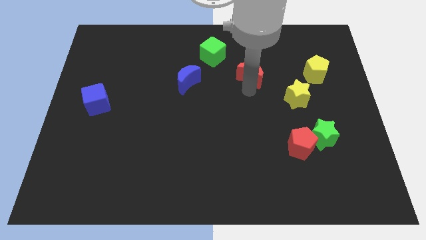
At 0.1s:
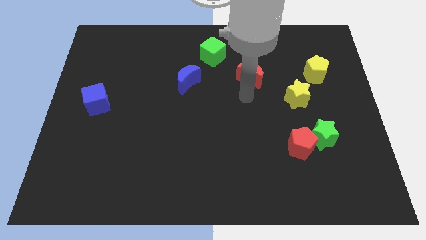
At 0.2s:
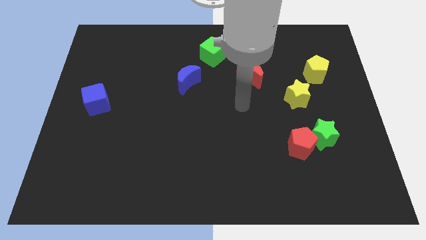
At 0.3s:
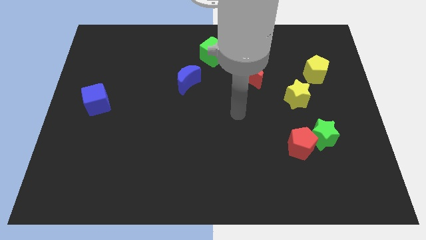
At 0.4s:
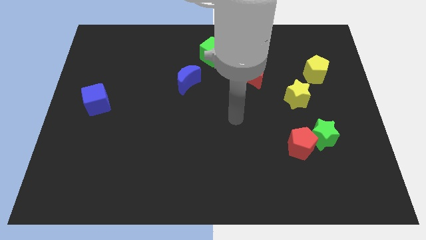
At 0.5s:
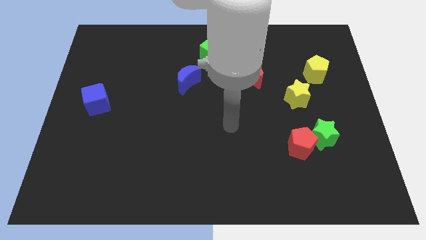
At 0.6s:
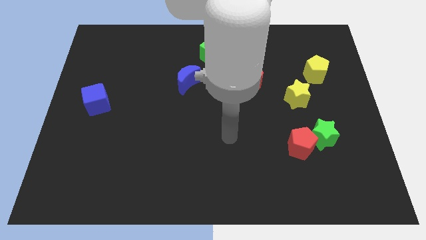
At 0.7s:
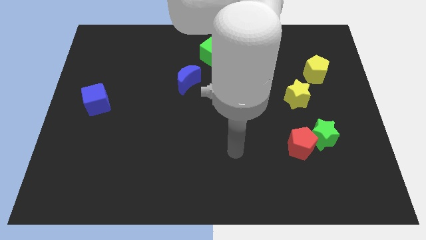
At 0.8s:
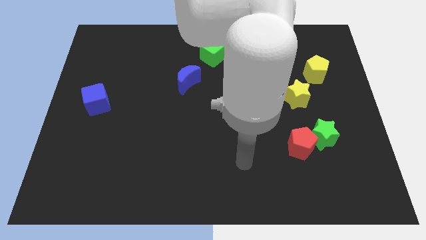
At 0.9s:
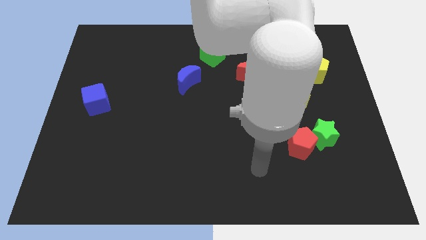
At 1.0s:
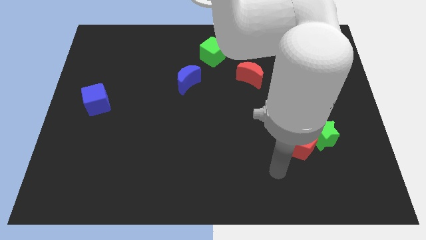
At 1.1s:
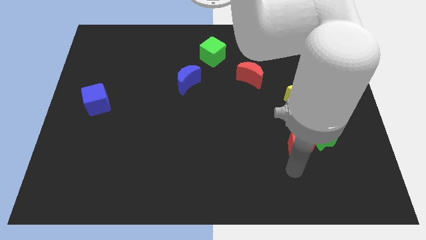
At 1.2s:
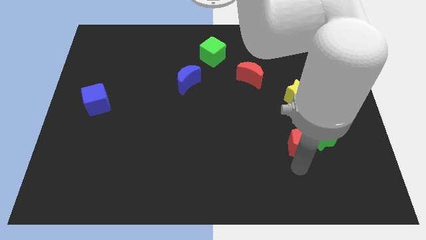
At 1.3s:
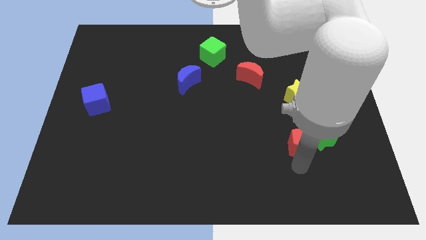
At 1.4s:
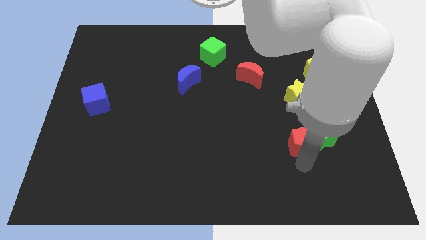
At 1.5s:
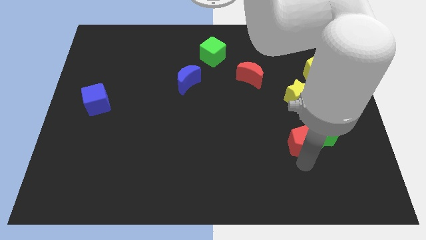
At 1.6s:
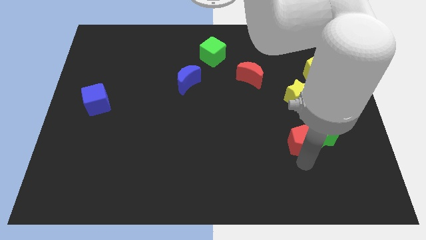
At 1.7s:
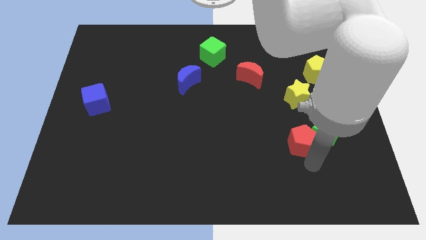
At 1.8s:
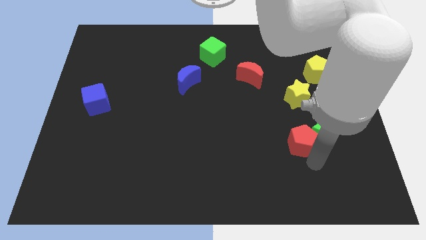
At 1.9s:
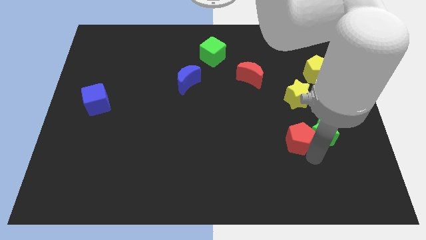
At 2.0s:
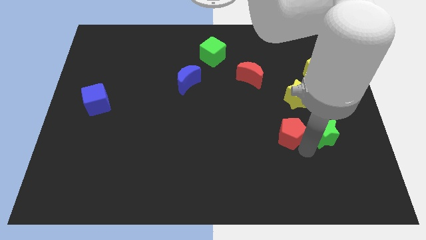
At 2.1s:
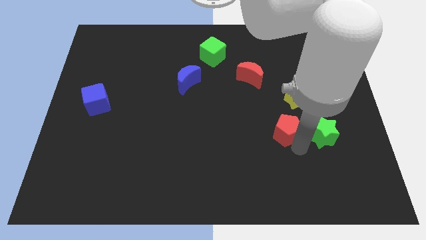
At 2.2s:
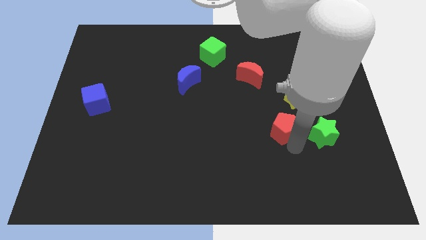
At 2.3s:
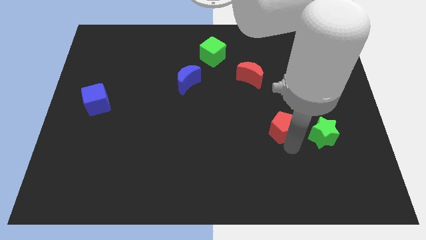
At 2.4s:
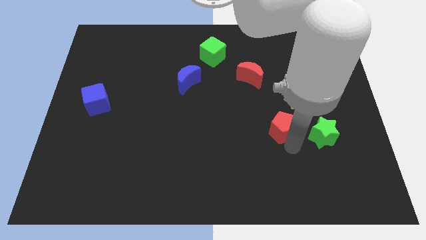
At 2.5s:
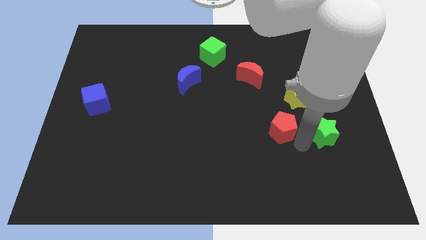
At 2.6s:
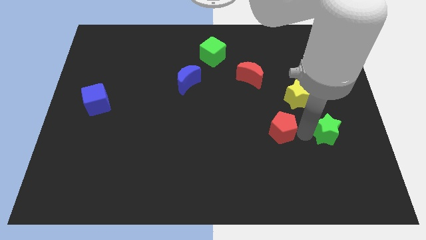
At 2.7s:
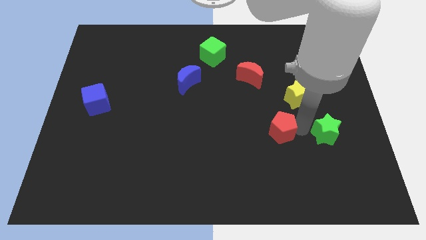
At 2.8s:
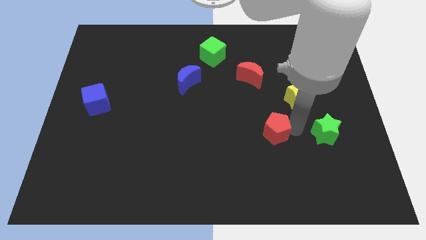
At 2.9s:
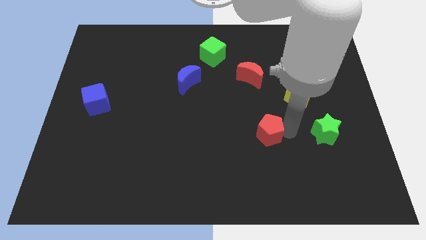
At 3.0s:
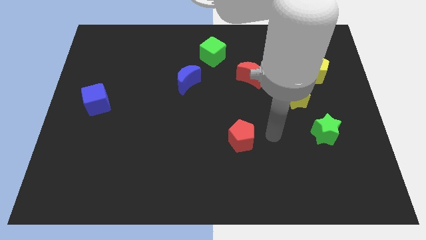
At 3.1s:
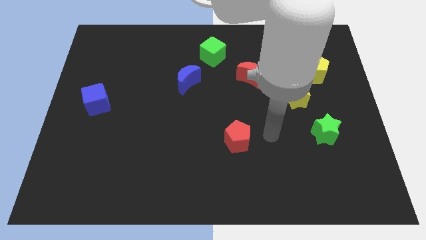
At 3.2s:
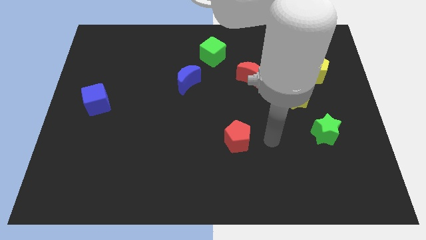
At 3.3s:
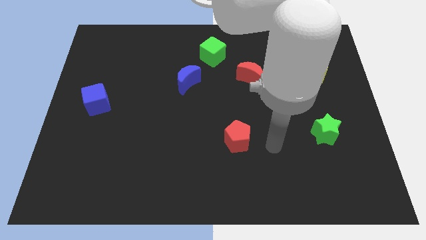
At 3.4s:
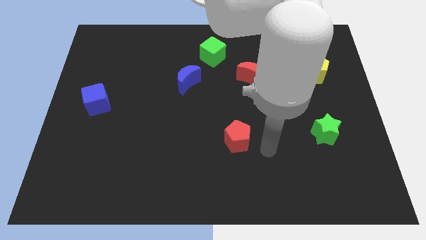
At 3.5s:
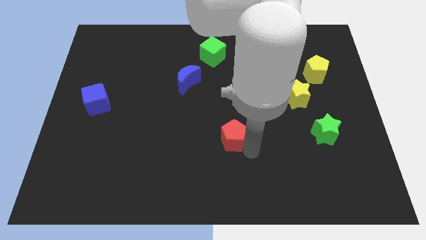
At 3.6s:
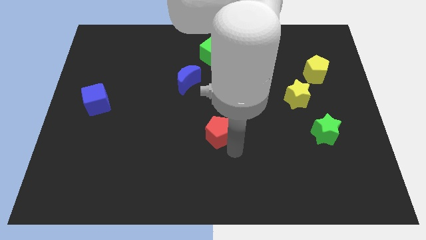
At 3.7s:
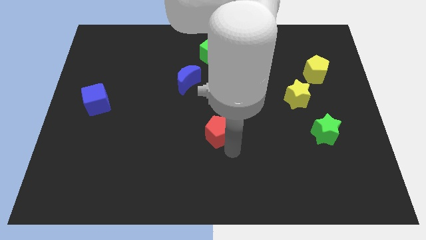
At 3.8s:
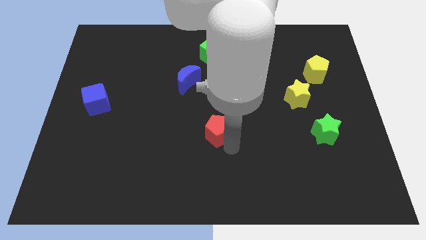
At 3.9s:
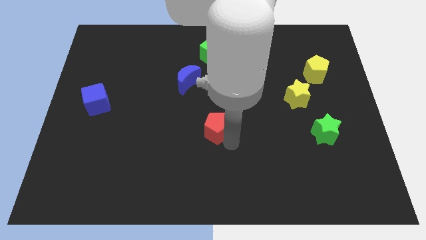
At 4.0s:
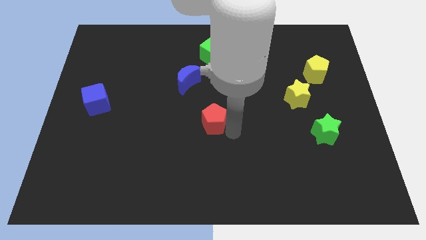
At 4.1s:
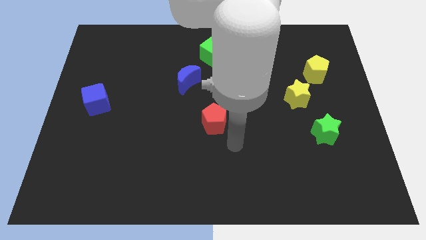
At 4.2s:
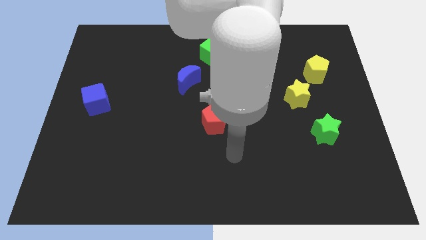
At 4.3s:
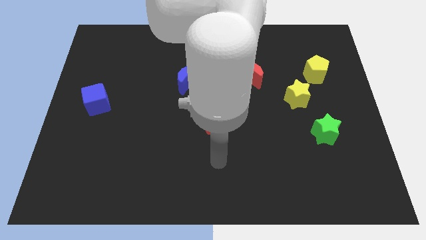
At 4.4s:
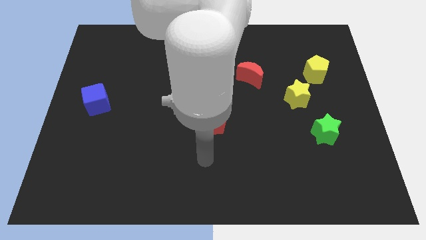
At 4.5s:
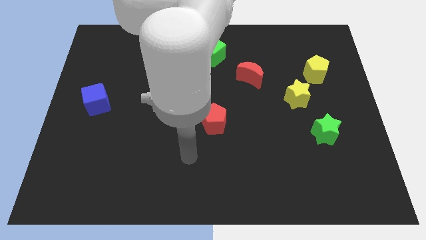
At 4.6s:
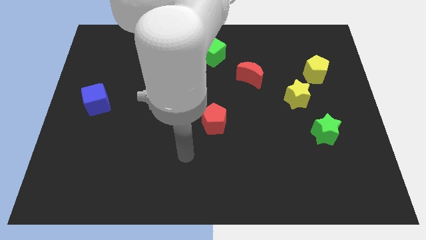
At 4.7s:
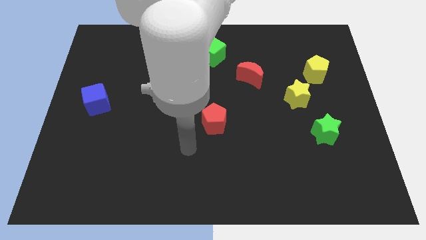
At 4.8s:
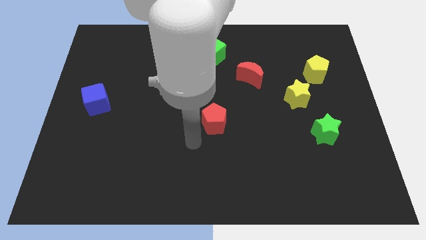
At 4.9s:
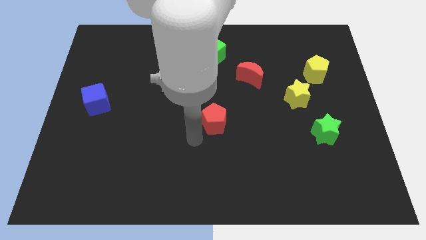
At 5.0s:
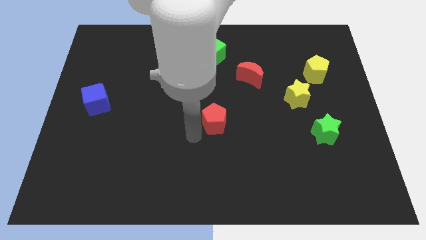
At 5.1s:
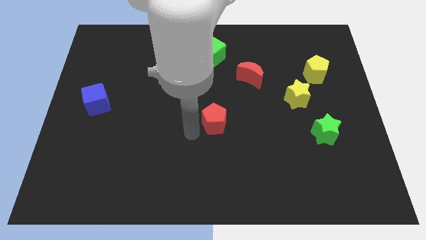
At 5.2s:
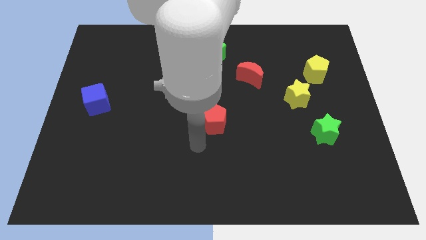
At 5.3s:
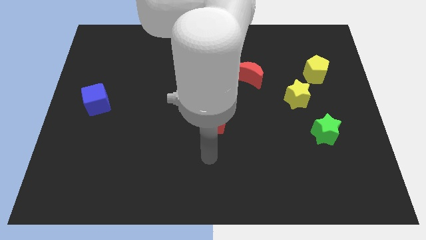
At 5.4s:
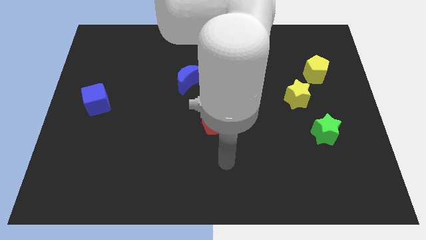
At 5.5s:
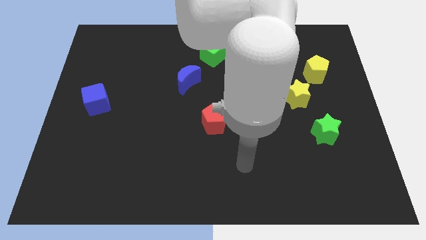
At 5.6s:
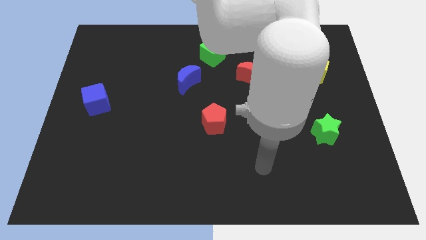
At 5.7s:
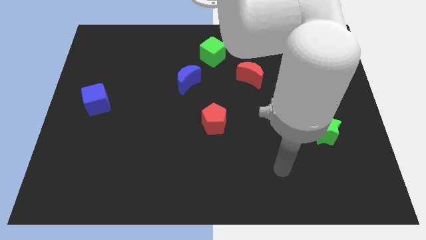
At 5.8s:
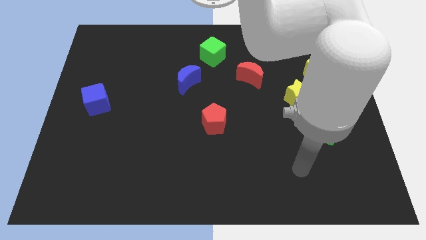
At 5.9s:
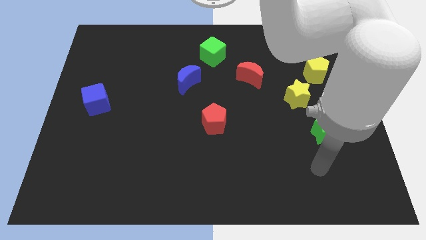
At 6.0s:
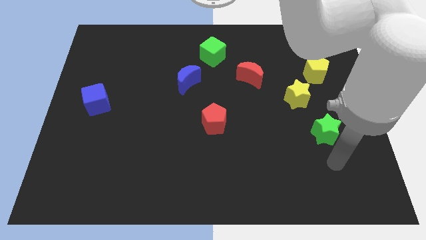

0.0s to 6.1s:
move the red pentagon away from the green star

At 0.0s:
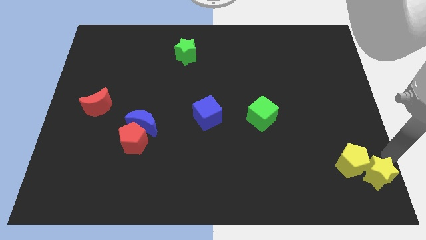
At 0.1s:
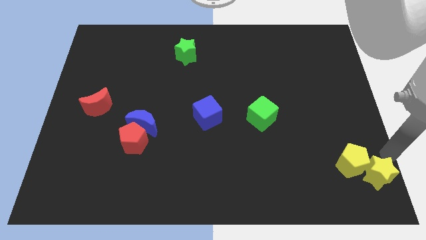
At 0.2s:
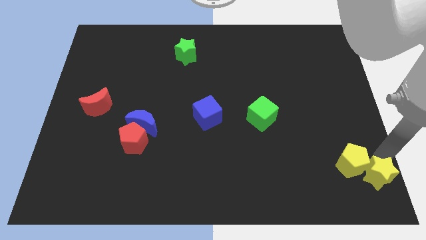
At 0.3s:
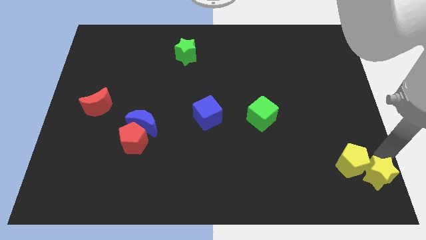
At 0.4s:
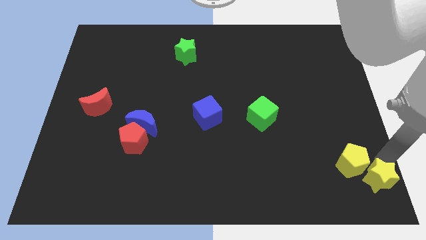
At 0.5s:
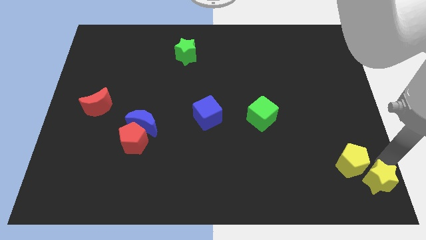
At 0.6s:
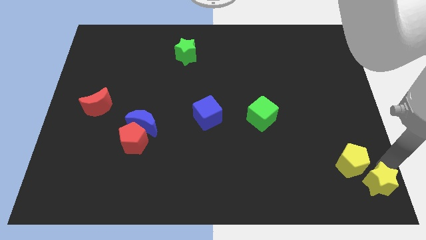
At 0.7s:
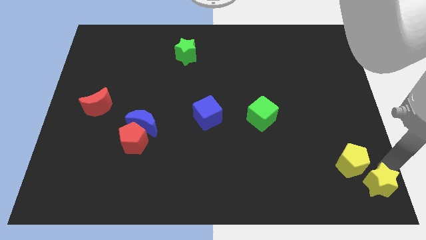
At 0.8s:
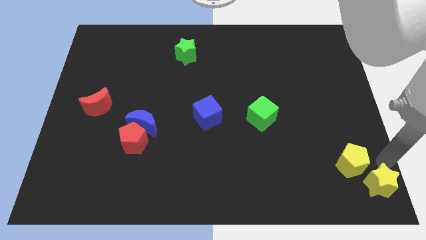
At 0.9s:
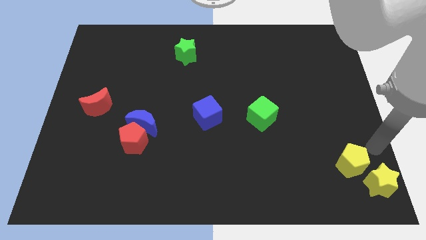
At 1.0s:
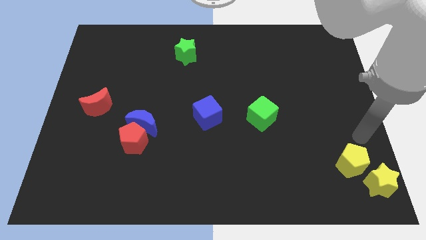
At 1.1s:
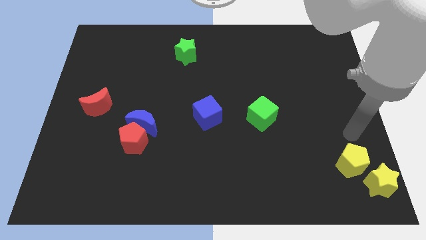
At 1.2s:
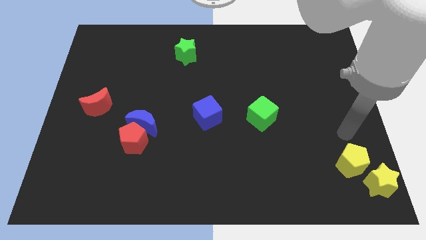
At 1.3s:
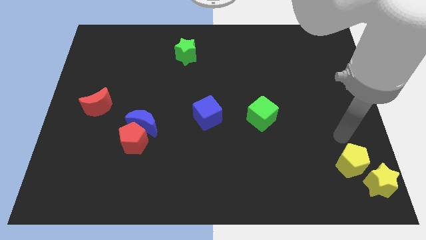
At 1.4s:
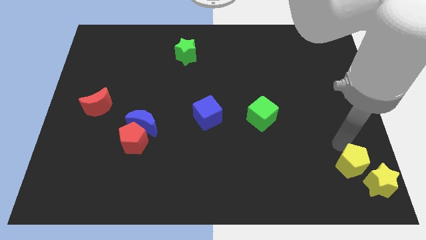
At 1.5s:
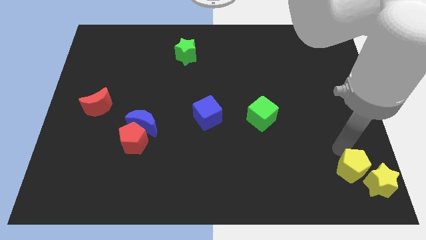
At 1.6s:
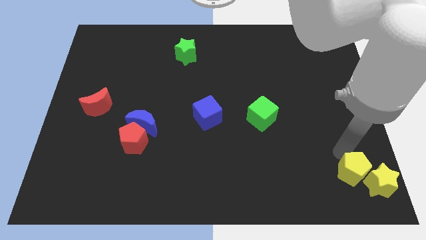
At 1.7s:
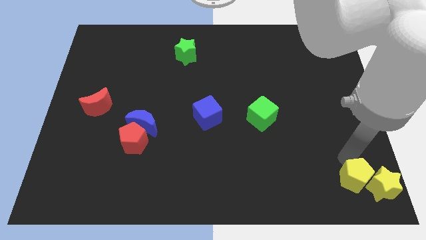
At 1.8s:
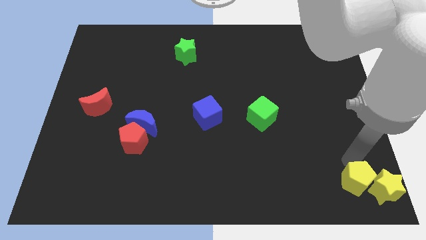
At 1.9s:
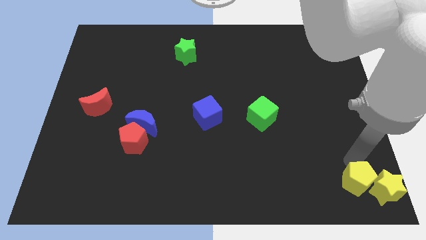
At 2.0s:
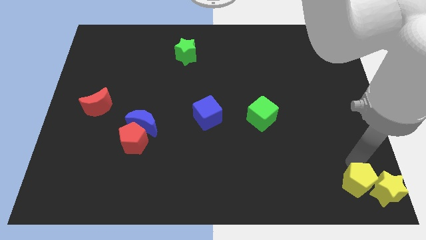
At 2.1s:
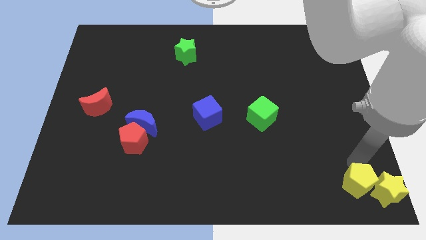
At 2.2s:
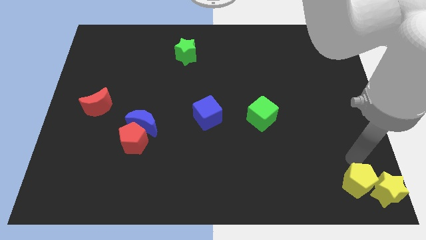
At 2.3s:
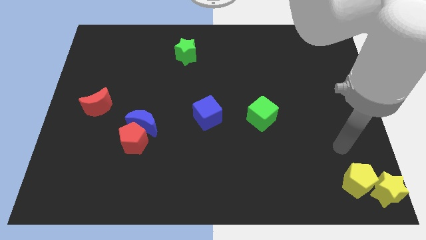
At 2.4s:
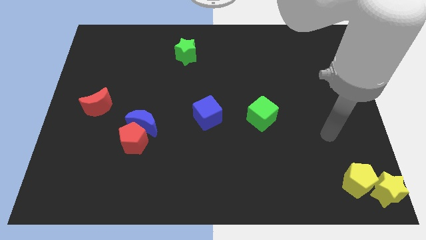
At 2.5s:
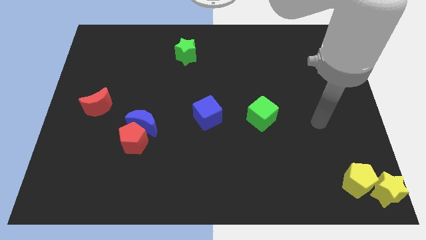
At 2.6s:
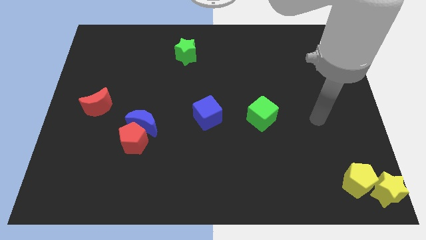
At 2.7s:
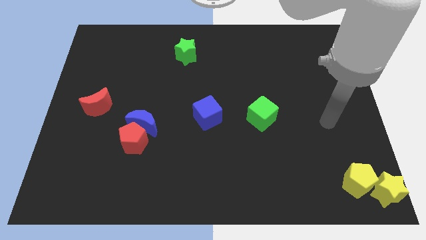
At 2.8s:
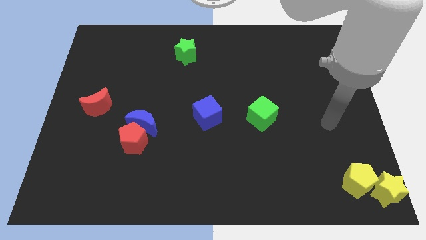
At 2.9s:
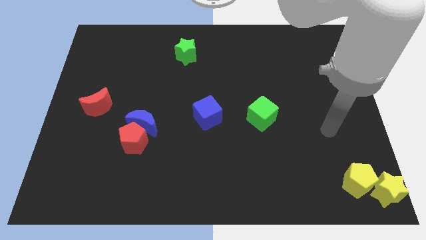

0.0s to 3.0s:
push the yellow star to the bottom right corner with yellow pentagon
